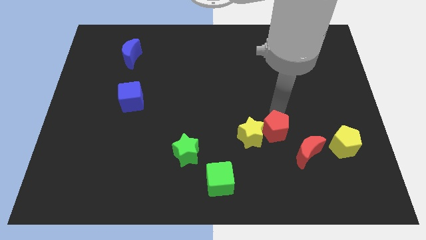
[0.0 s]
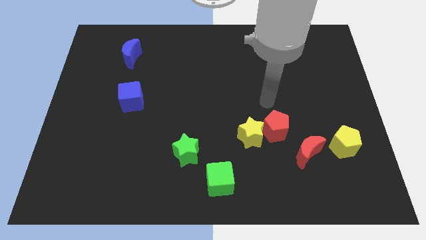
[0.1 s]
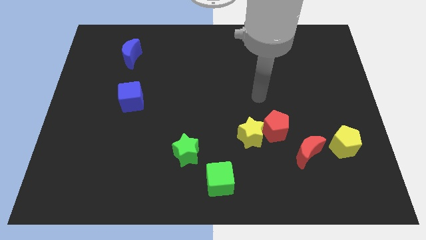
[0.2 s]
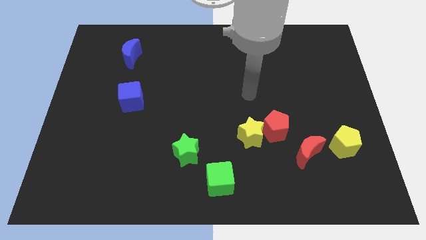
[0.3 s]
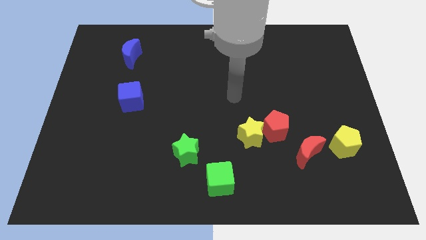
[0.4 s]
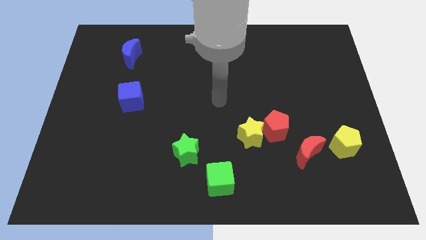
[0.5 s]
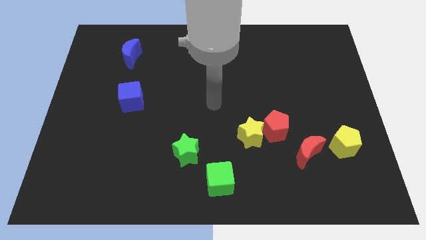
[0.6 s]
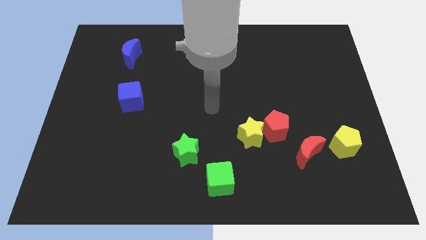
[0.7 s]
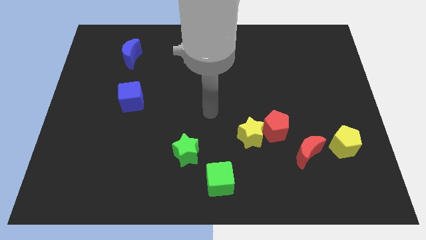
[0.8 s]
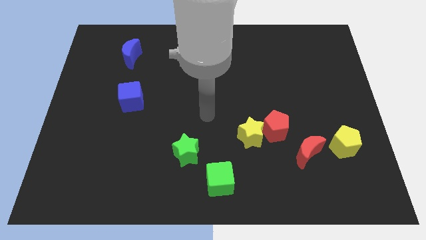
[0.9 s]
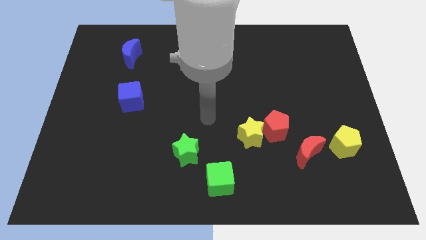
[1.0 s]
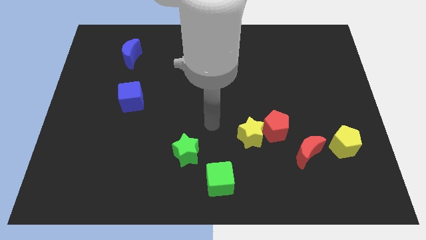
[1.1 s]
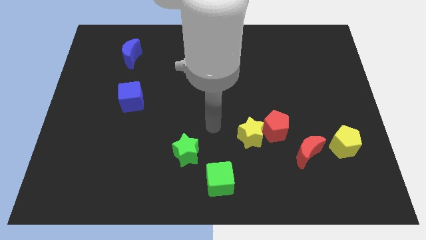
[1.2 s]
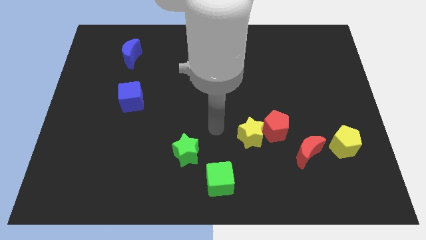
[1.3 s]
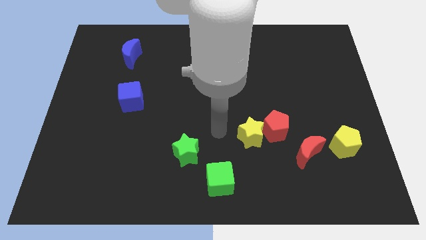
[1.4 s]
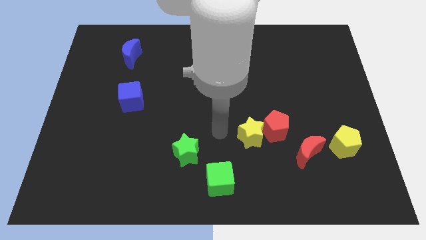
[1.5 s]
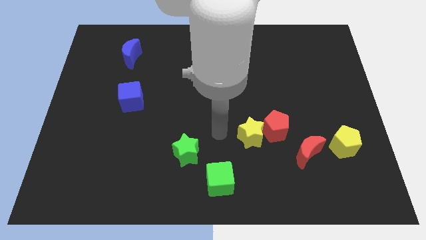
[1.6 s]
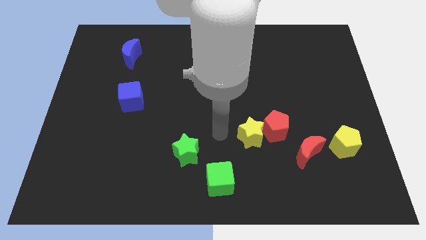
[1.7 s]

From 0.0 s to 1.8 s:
place your arm vertically above the green cube

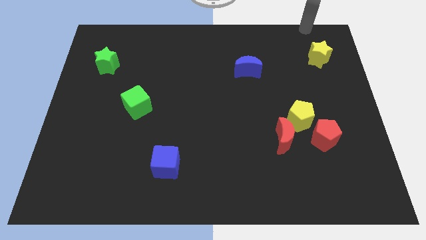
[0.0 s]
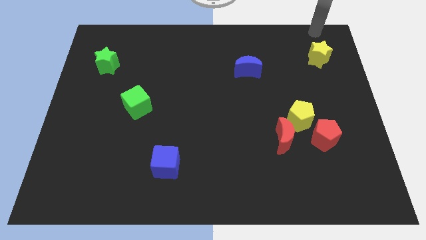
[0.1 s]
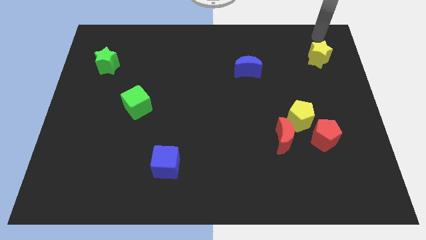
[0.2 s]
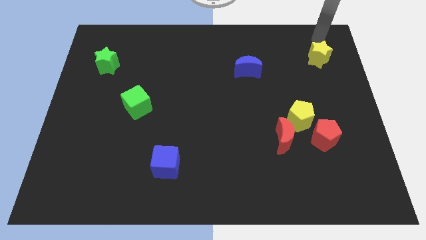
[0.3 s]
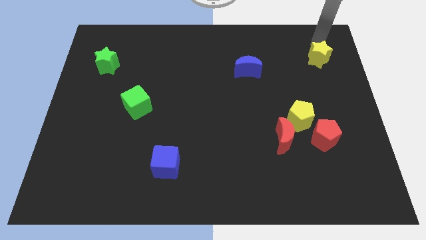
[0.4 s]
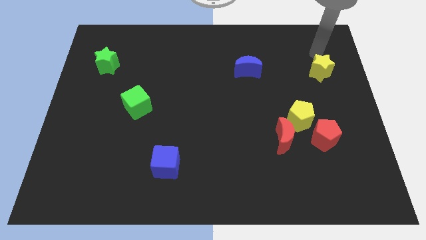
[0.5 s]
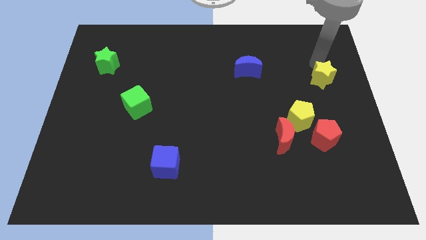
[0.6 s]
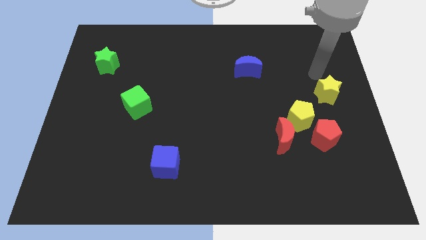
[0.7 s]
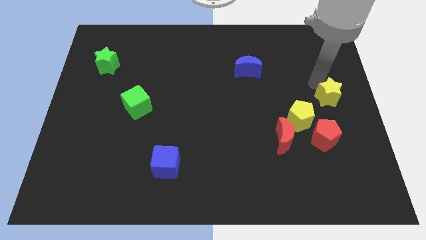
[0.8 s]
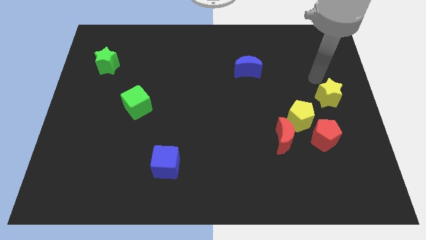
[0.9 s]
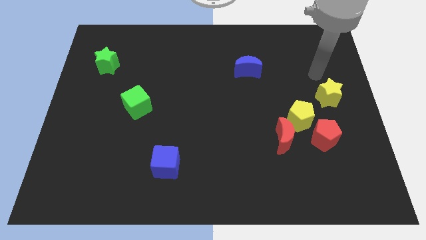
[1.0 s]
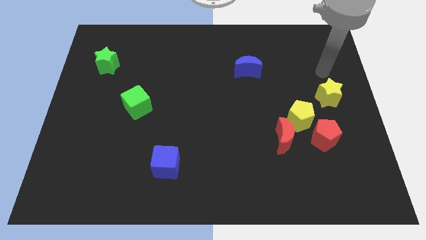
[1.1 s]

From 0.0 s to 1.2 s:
slide the yellow star towards the red pentagon

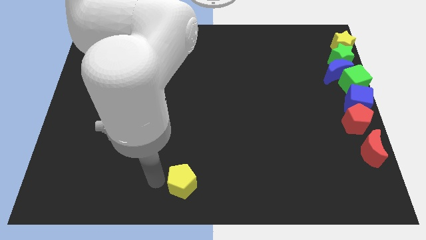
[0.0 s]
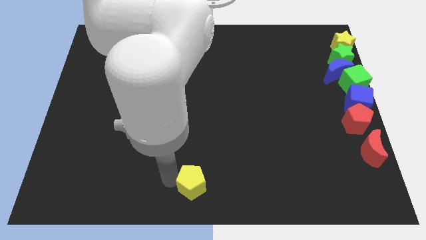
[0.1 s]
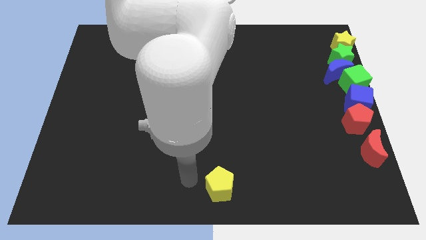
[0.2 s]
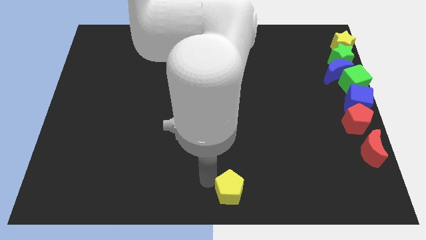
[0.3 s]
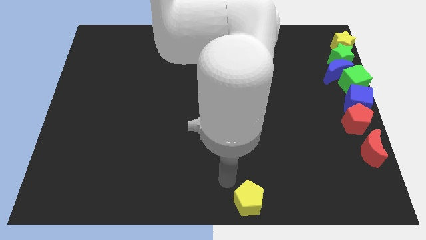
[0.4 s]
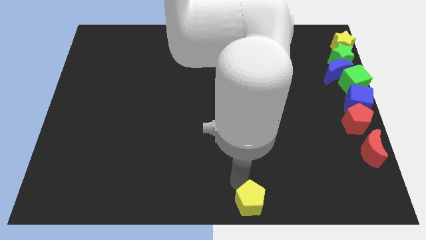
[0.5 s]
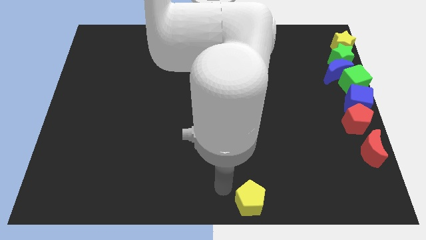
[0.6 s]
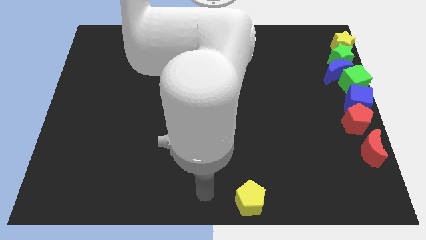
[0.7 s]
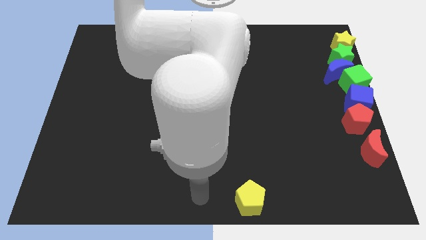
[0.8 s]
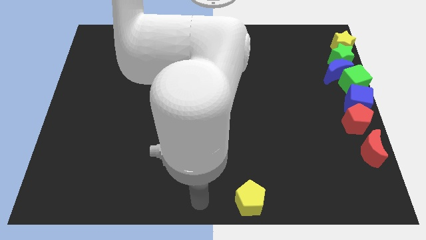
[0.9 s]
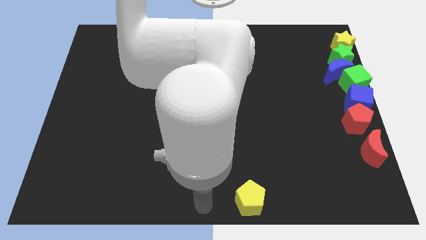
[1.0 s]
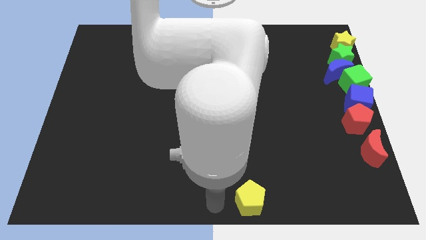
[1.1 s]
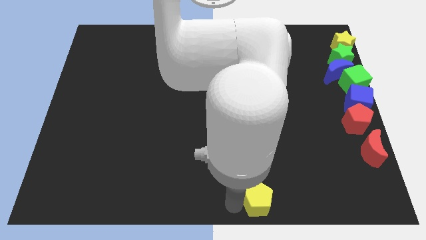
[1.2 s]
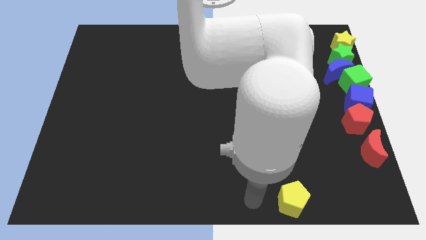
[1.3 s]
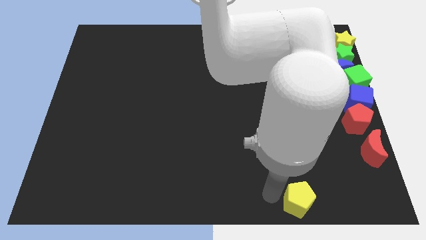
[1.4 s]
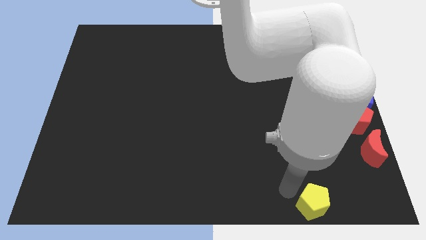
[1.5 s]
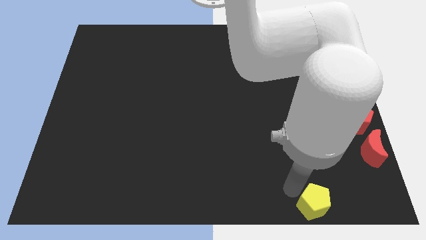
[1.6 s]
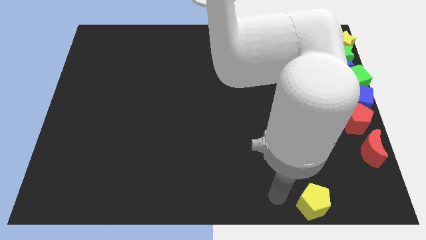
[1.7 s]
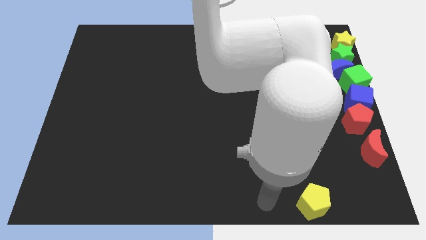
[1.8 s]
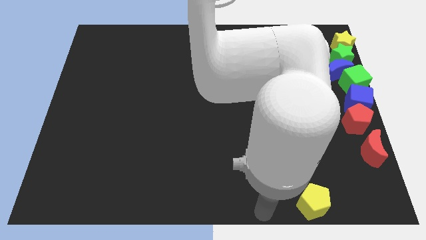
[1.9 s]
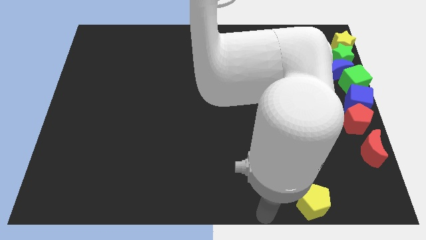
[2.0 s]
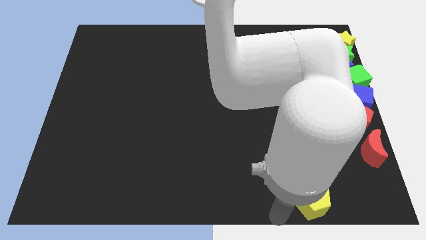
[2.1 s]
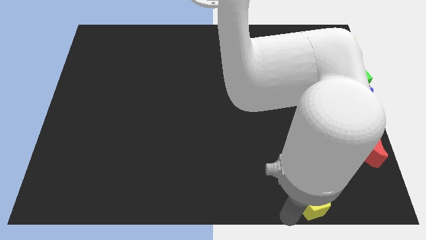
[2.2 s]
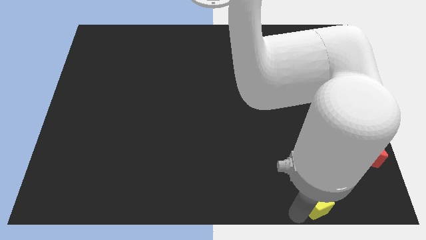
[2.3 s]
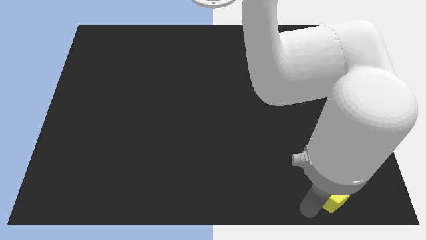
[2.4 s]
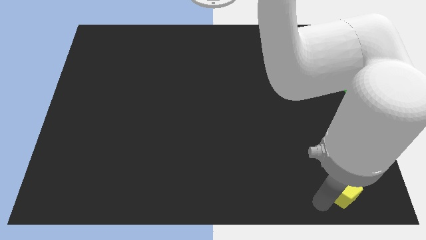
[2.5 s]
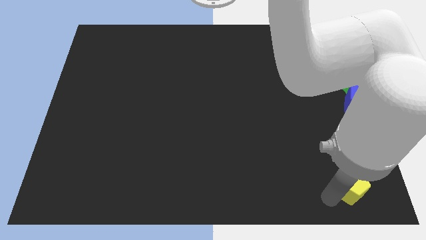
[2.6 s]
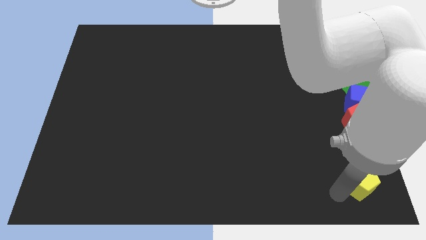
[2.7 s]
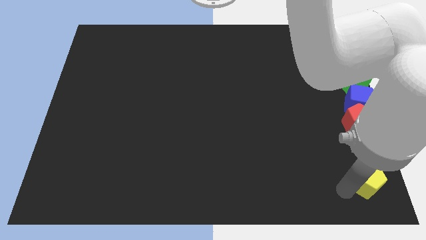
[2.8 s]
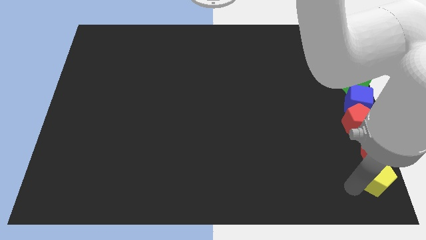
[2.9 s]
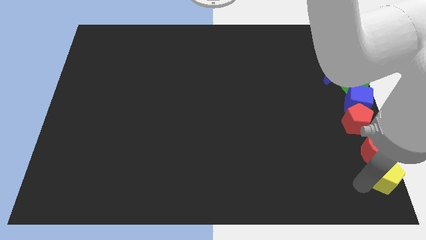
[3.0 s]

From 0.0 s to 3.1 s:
move yellow pentagon below to the red crescent

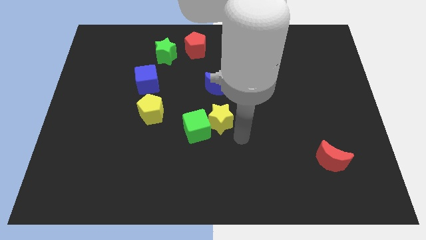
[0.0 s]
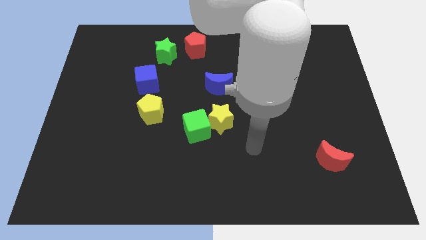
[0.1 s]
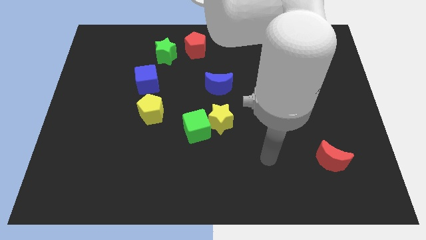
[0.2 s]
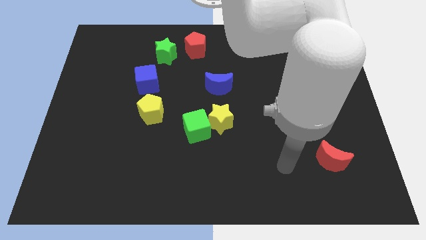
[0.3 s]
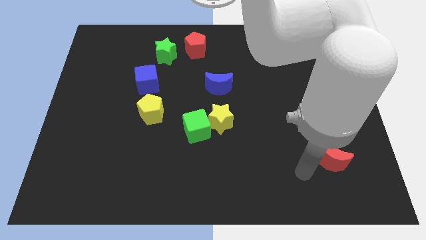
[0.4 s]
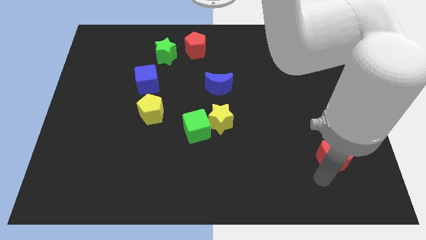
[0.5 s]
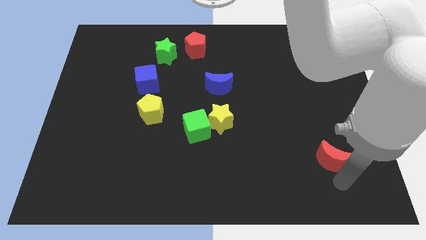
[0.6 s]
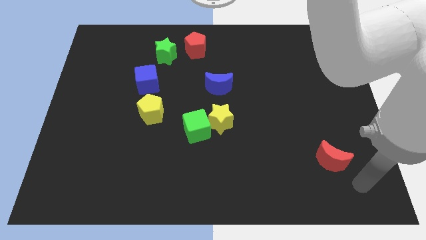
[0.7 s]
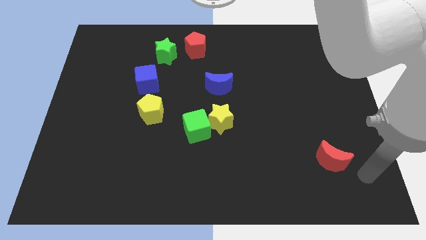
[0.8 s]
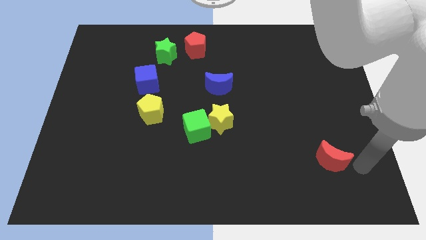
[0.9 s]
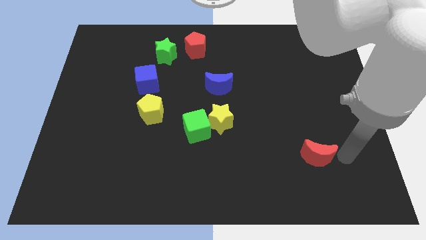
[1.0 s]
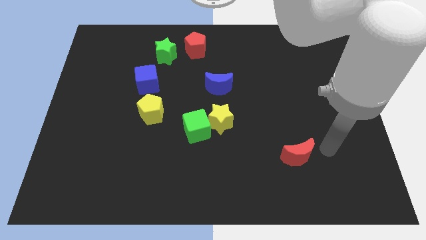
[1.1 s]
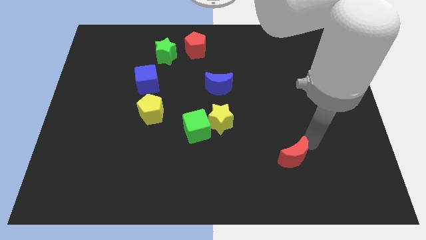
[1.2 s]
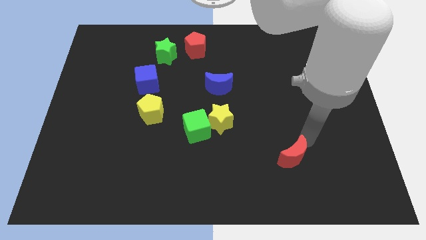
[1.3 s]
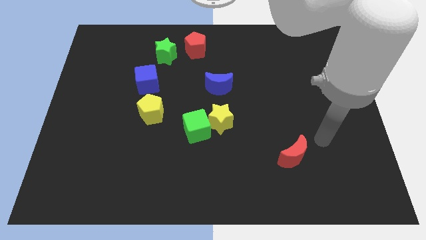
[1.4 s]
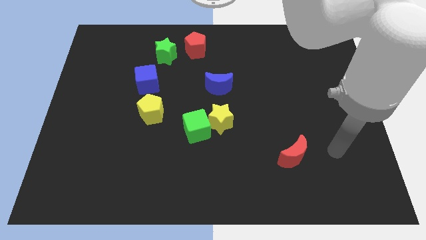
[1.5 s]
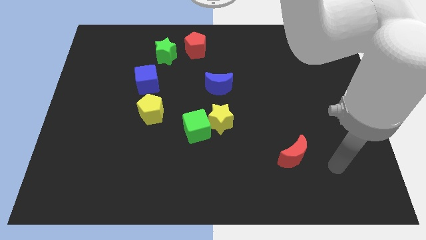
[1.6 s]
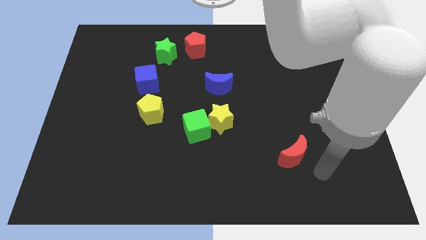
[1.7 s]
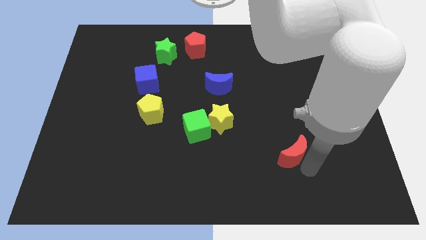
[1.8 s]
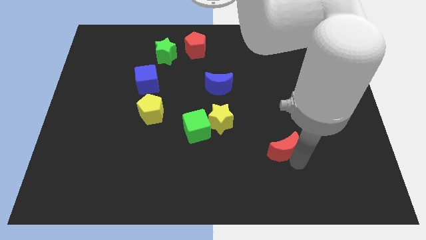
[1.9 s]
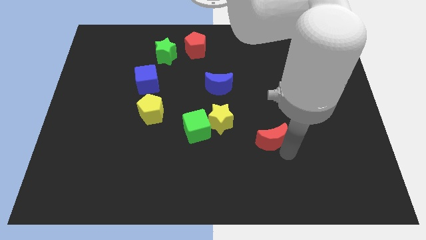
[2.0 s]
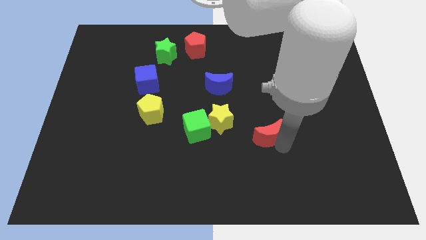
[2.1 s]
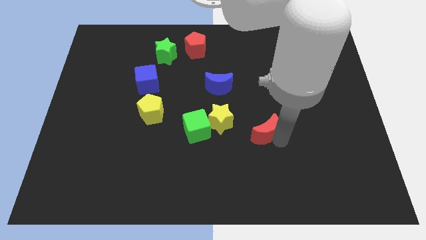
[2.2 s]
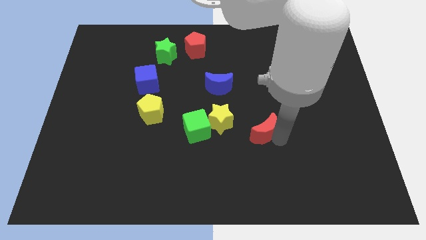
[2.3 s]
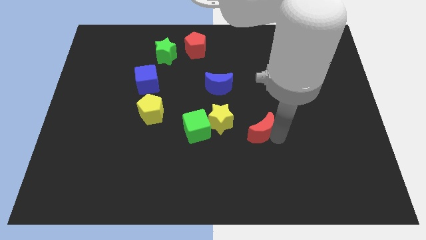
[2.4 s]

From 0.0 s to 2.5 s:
move red crescent towards yellow star

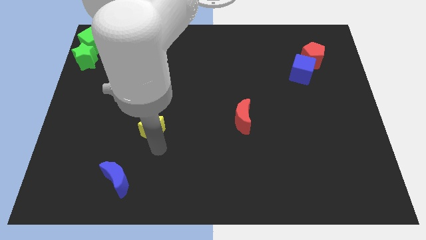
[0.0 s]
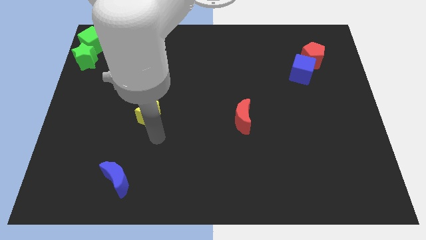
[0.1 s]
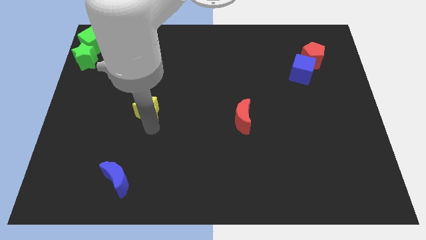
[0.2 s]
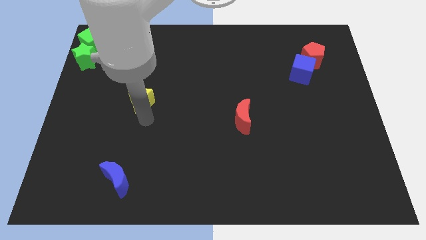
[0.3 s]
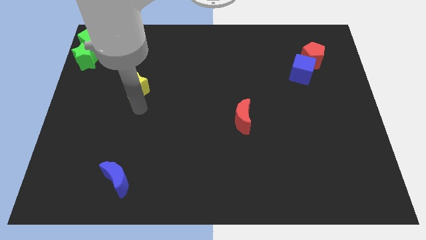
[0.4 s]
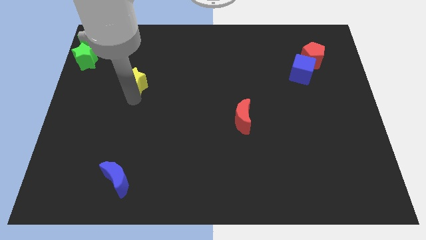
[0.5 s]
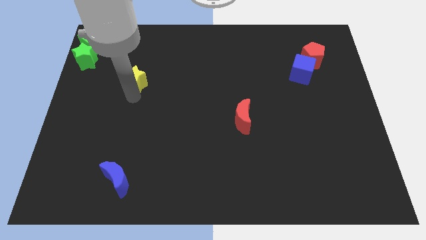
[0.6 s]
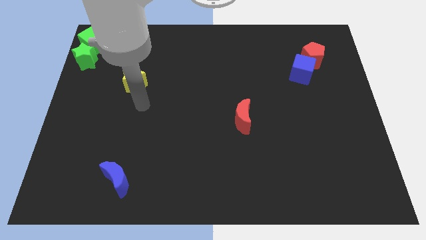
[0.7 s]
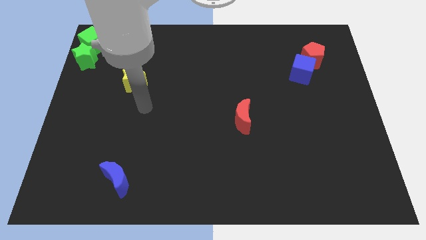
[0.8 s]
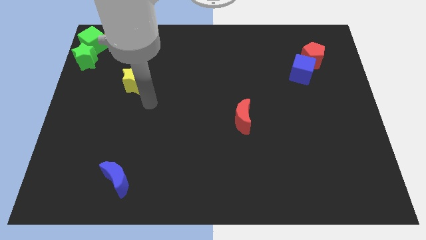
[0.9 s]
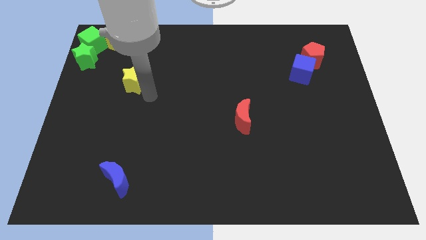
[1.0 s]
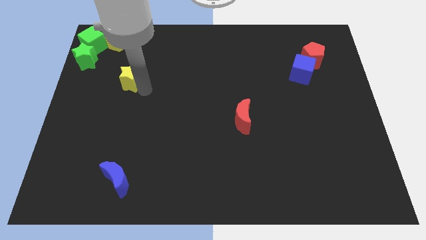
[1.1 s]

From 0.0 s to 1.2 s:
push the yellow star to the top
